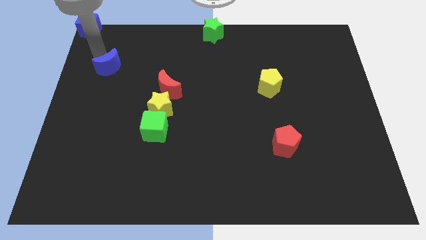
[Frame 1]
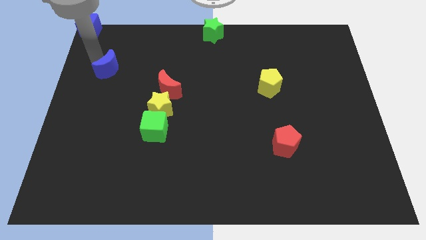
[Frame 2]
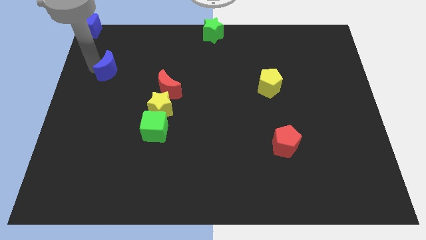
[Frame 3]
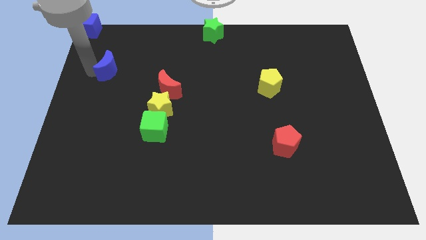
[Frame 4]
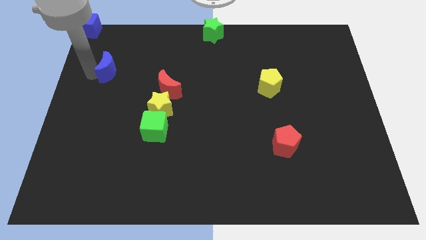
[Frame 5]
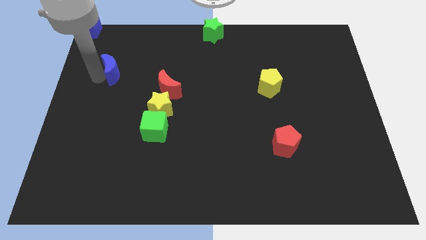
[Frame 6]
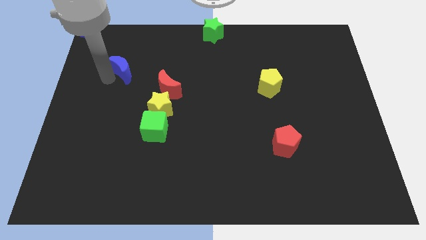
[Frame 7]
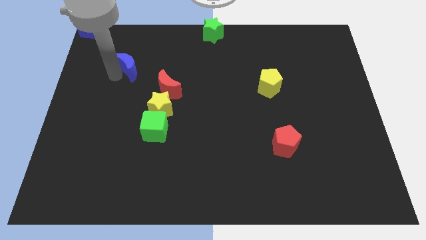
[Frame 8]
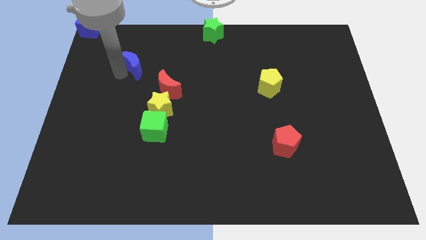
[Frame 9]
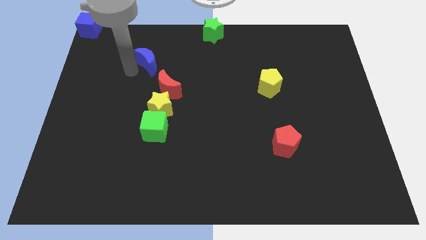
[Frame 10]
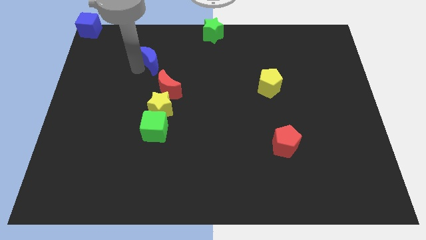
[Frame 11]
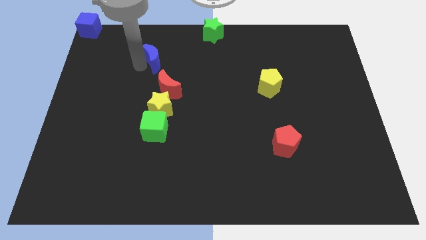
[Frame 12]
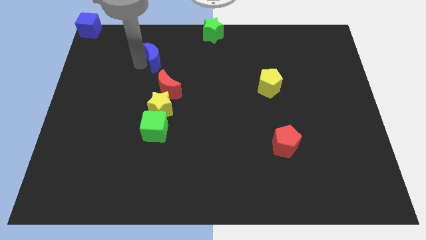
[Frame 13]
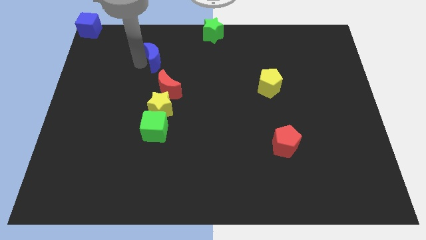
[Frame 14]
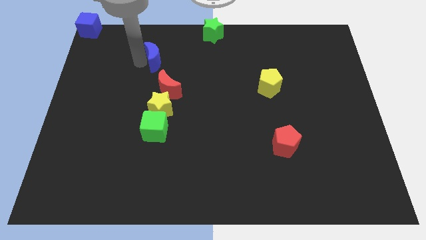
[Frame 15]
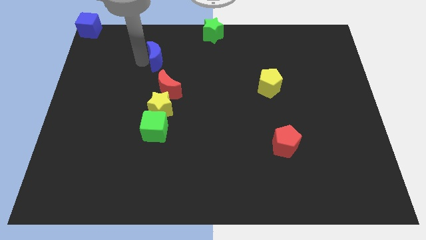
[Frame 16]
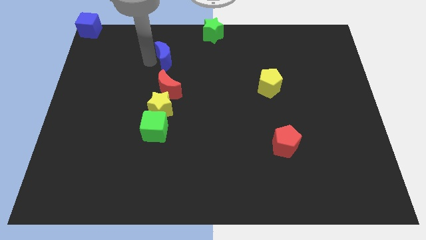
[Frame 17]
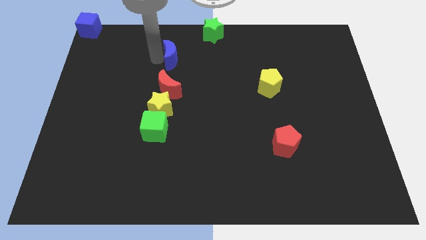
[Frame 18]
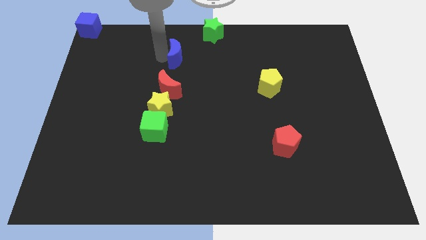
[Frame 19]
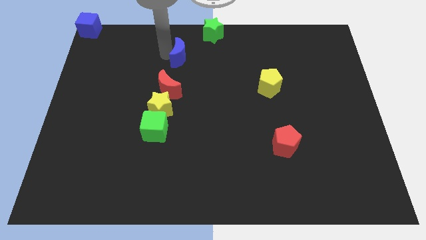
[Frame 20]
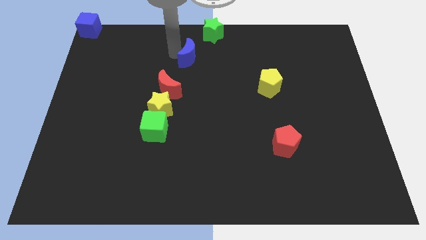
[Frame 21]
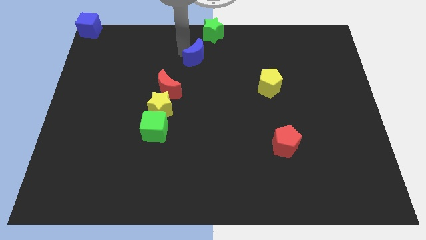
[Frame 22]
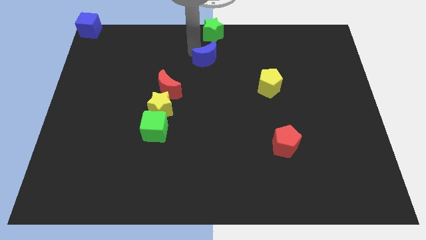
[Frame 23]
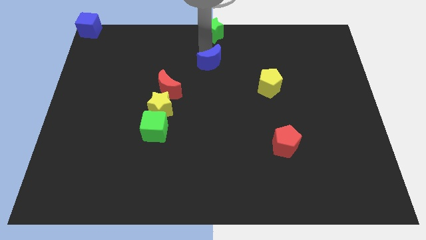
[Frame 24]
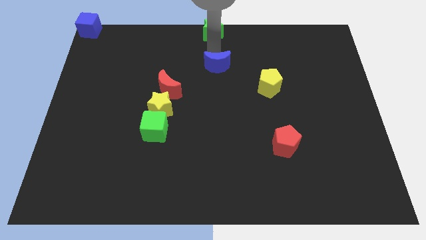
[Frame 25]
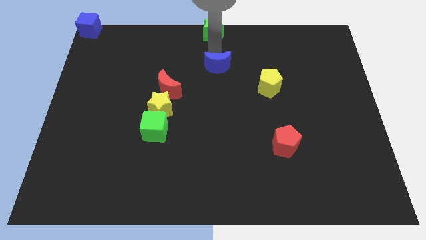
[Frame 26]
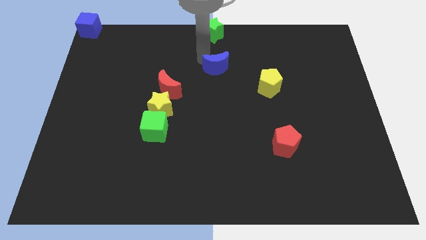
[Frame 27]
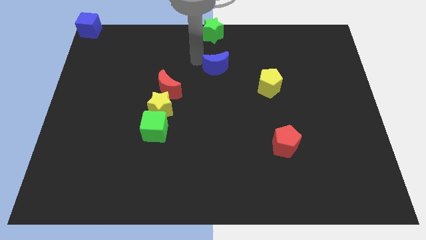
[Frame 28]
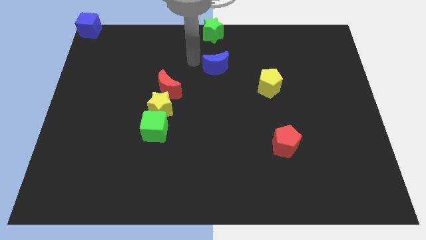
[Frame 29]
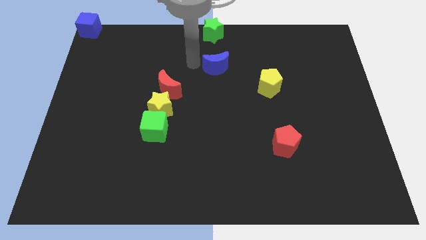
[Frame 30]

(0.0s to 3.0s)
push the blue crescent to the bottom of the green star

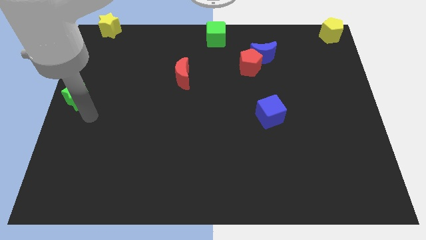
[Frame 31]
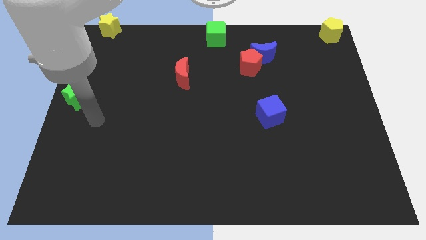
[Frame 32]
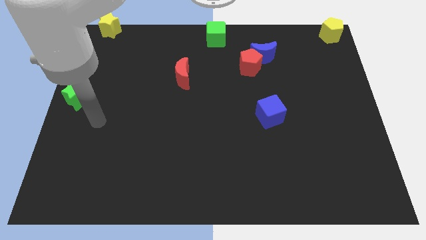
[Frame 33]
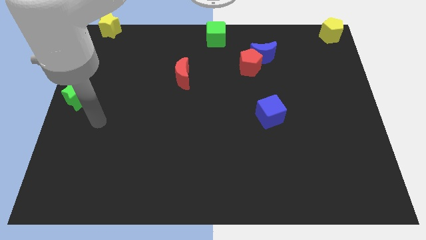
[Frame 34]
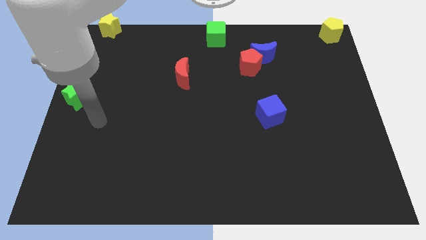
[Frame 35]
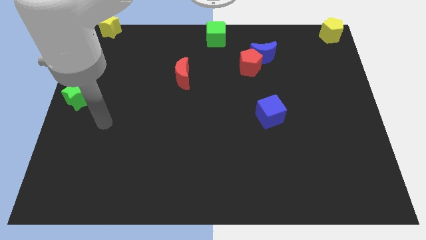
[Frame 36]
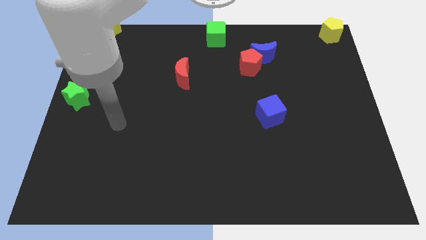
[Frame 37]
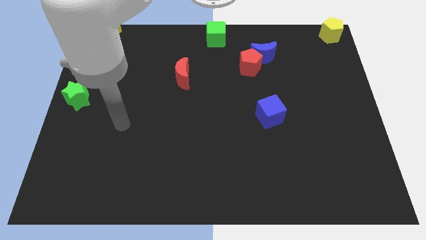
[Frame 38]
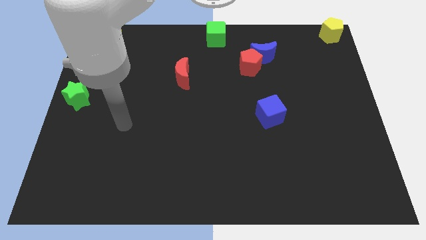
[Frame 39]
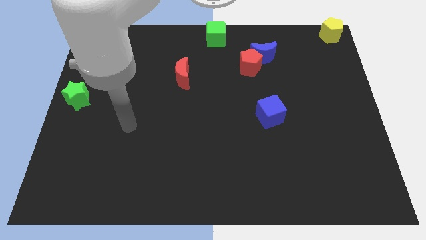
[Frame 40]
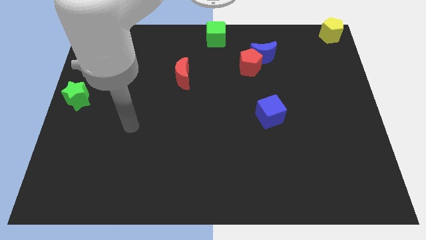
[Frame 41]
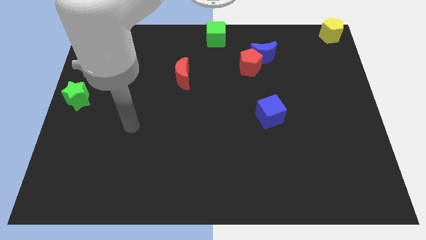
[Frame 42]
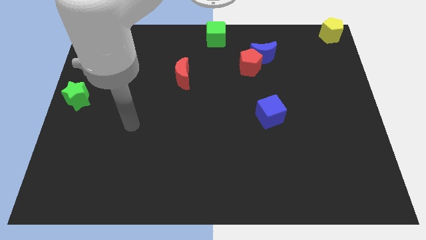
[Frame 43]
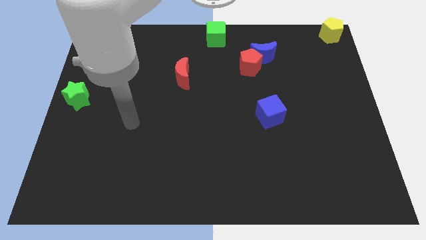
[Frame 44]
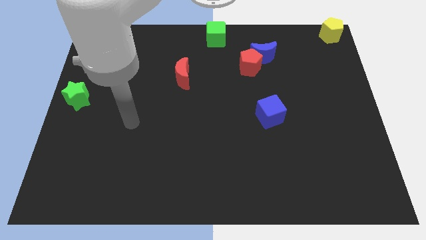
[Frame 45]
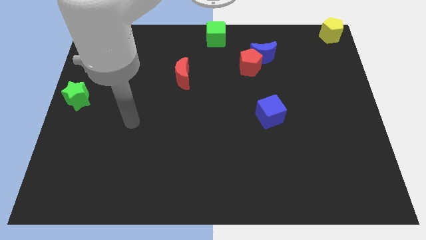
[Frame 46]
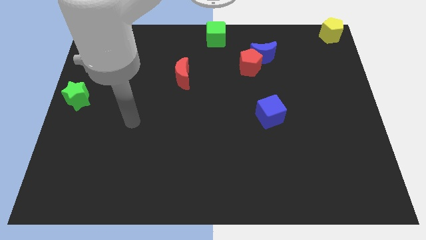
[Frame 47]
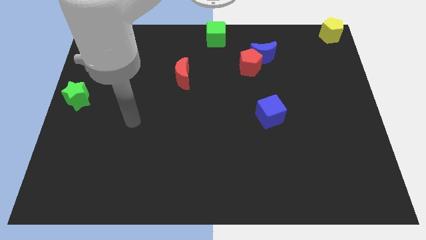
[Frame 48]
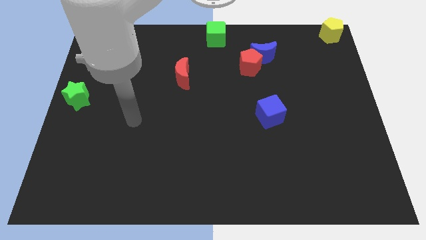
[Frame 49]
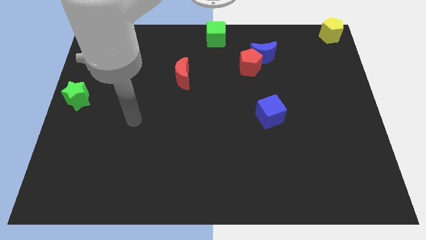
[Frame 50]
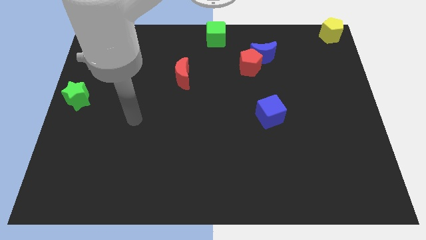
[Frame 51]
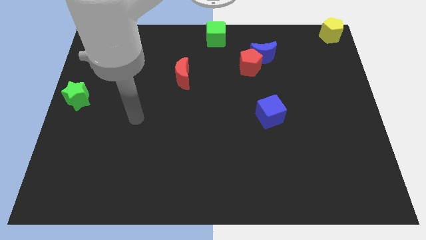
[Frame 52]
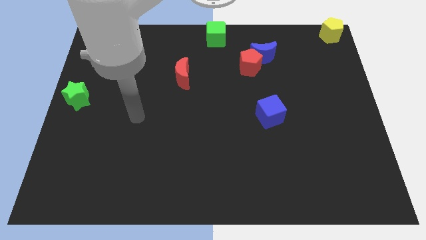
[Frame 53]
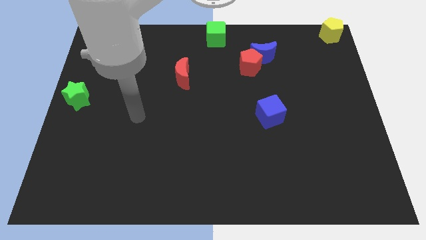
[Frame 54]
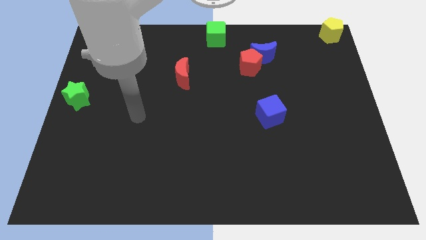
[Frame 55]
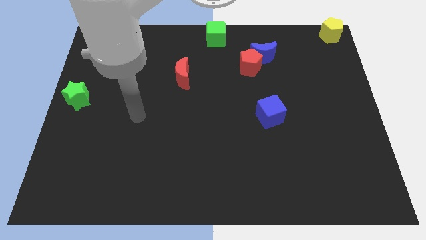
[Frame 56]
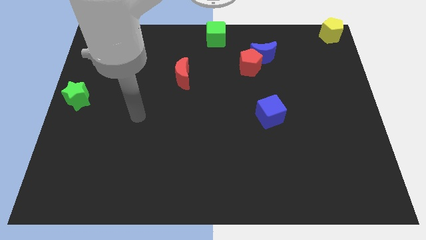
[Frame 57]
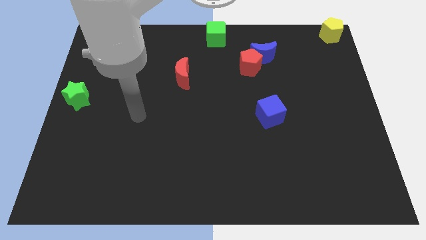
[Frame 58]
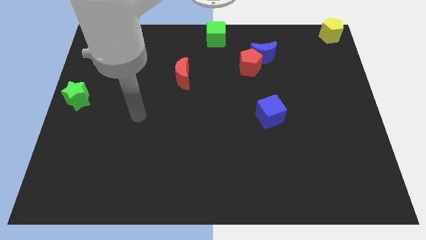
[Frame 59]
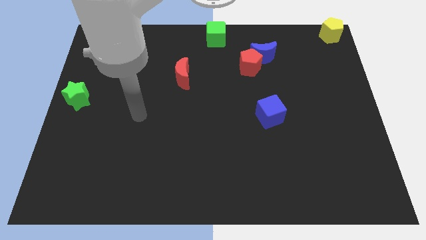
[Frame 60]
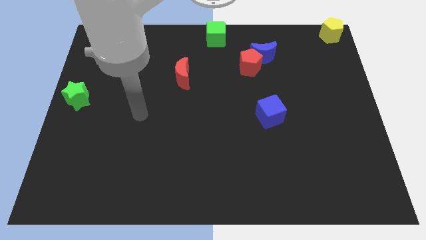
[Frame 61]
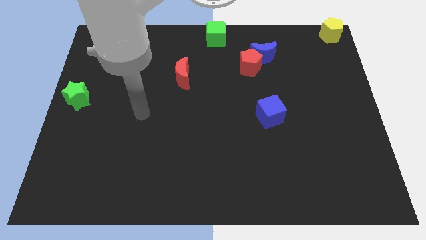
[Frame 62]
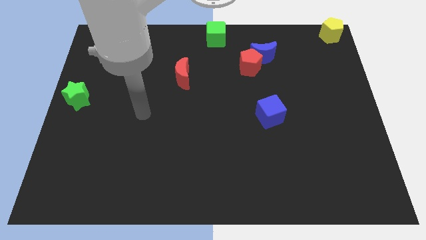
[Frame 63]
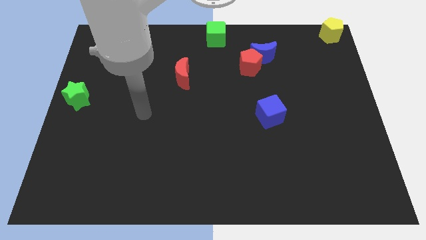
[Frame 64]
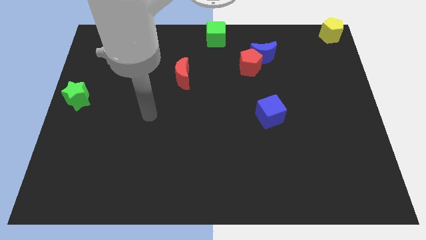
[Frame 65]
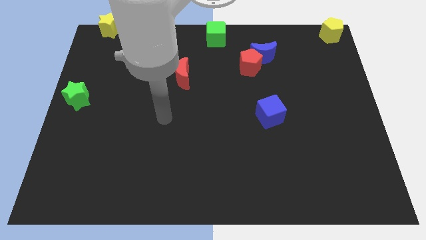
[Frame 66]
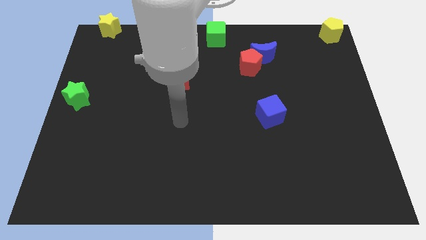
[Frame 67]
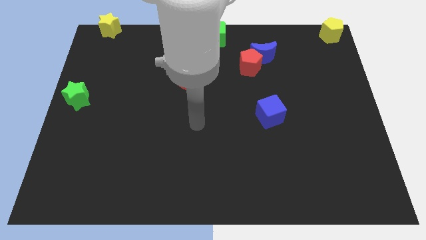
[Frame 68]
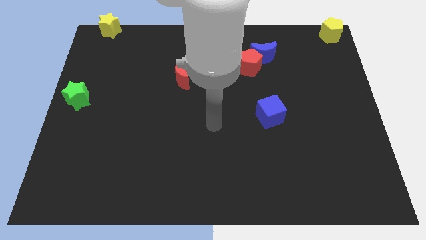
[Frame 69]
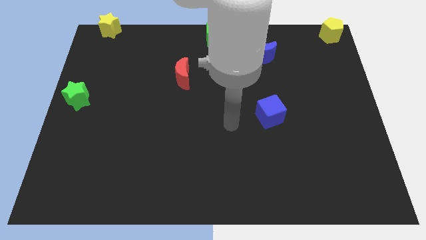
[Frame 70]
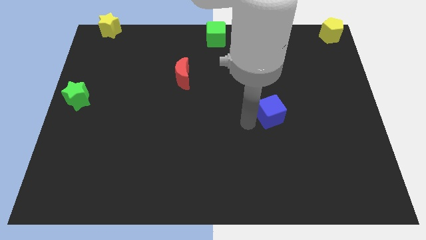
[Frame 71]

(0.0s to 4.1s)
move your arm towards the blue cube

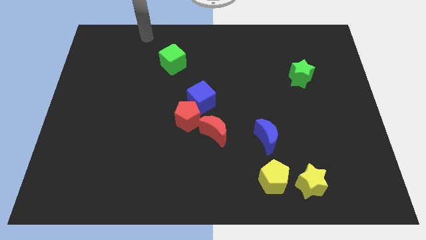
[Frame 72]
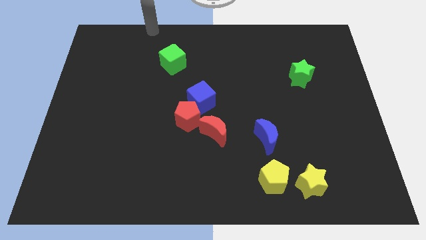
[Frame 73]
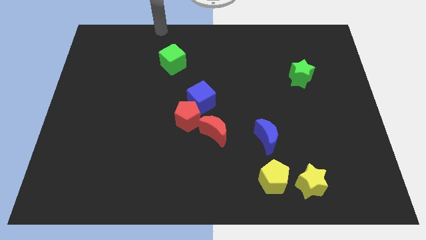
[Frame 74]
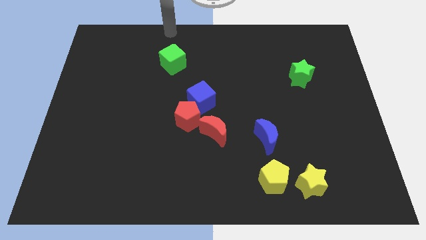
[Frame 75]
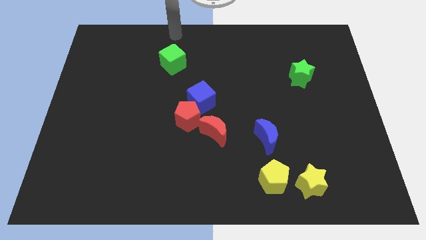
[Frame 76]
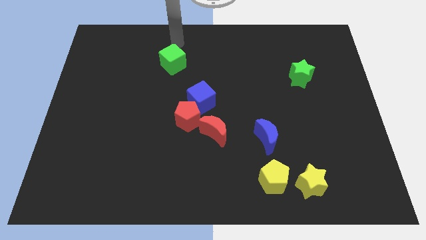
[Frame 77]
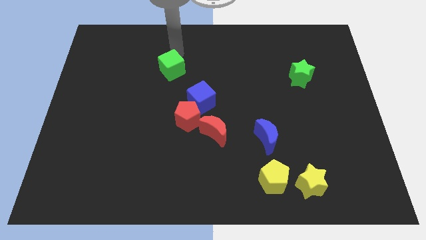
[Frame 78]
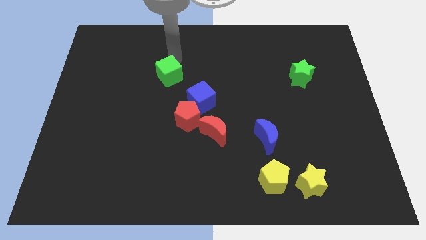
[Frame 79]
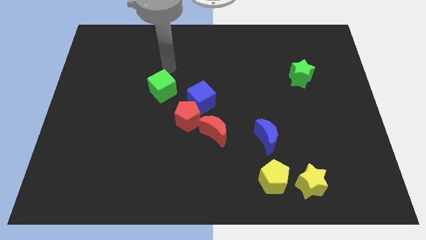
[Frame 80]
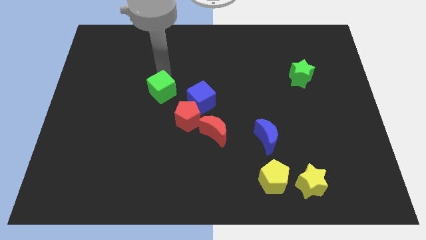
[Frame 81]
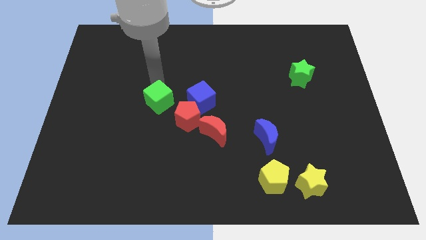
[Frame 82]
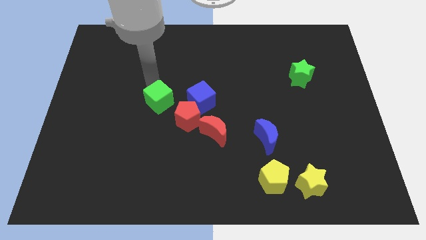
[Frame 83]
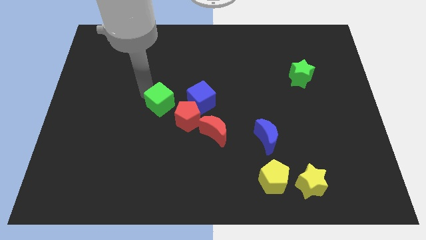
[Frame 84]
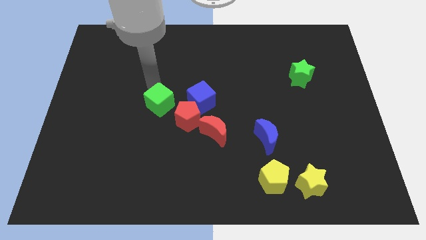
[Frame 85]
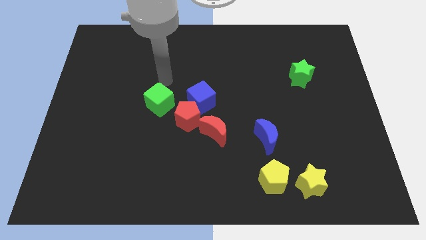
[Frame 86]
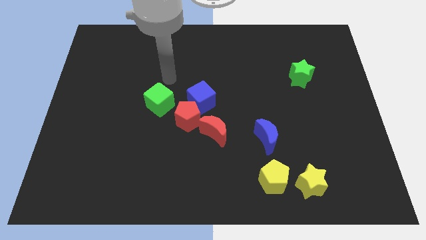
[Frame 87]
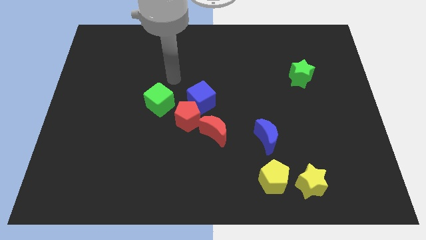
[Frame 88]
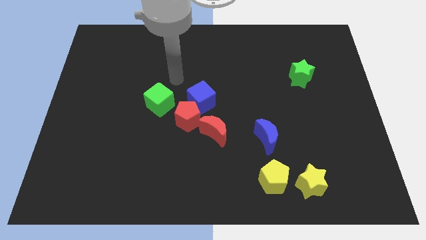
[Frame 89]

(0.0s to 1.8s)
move the green cube to left side of red pentagon
